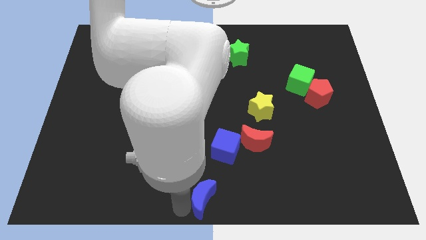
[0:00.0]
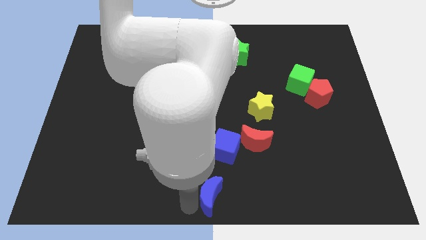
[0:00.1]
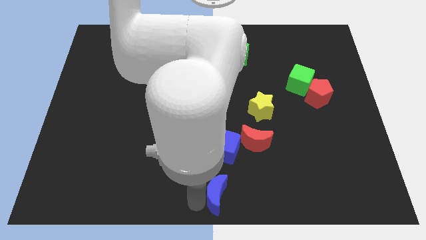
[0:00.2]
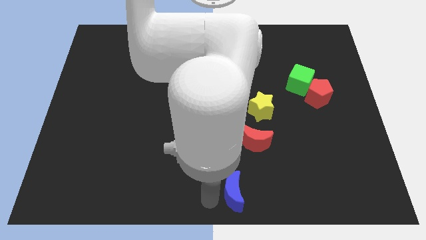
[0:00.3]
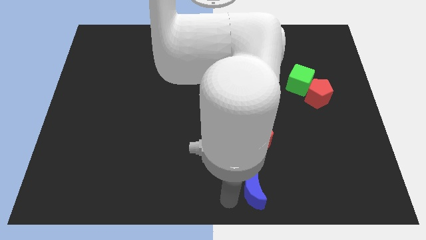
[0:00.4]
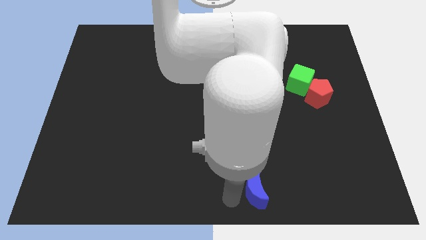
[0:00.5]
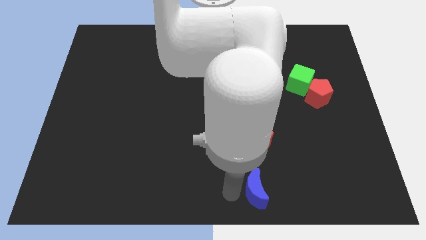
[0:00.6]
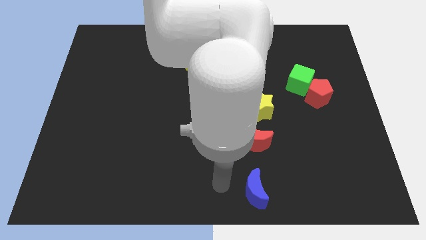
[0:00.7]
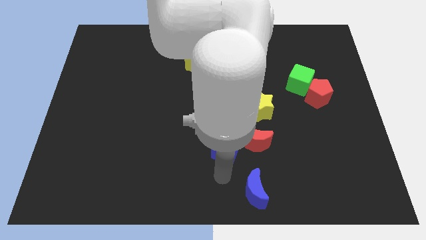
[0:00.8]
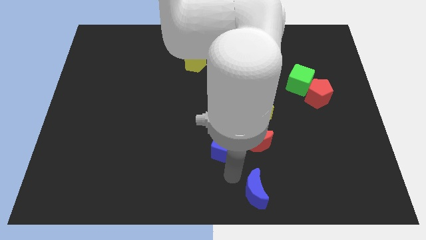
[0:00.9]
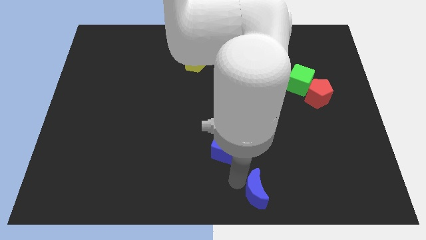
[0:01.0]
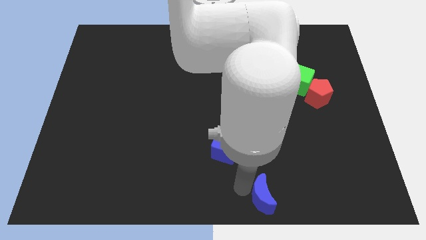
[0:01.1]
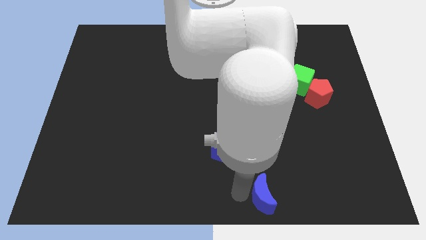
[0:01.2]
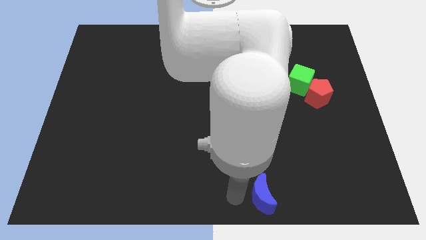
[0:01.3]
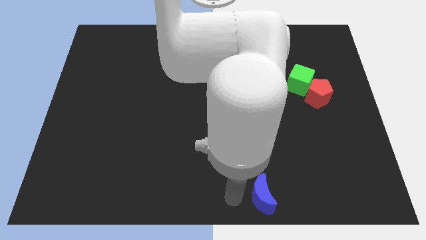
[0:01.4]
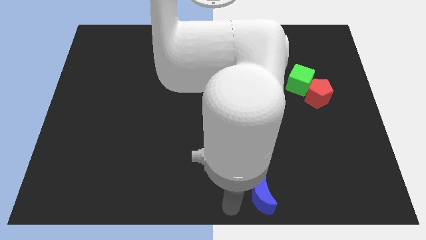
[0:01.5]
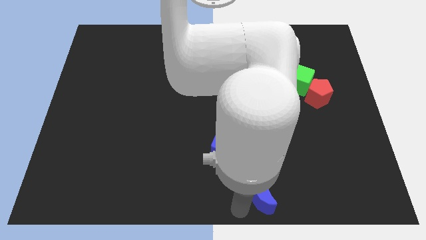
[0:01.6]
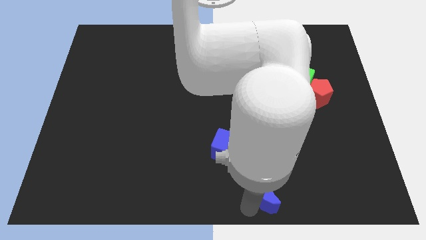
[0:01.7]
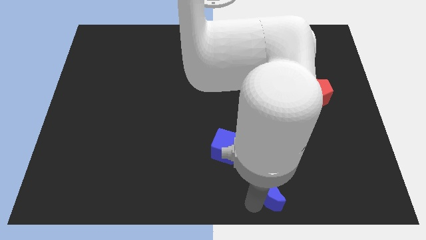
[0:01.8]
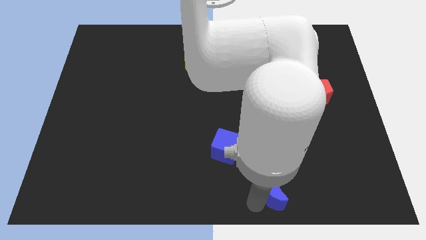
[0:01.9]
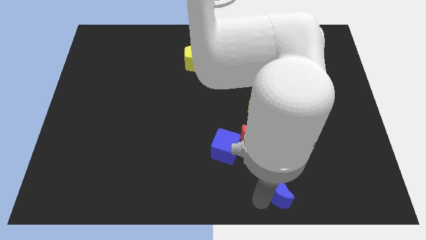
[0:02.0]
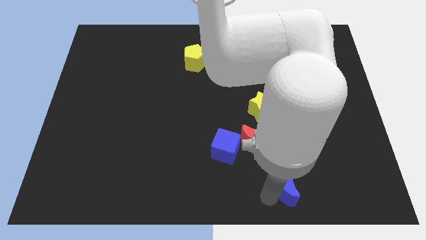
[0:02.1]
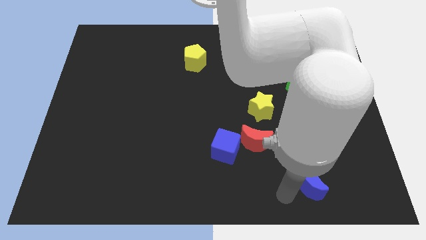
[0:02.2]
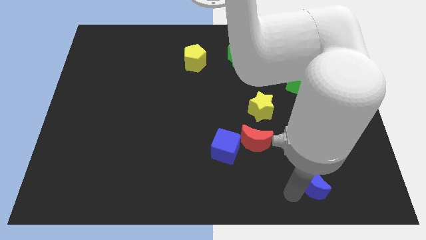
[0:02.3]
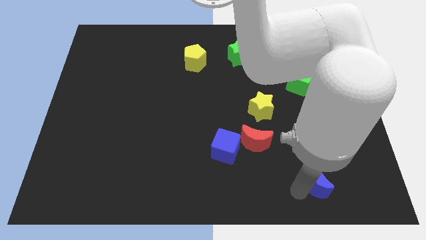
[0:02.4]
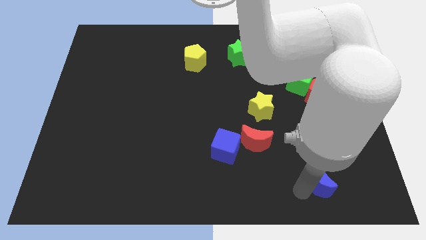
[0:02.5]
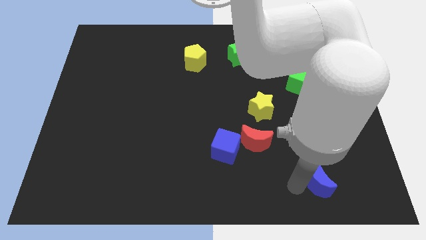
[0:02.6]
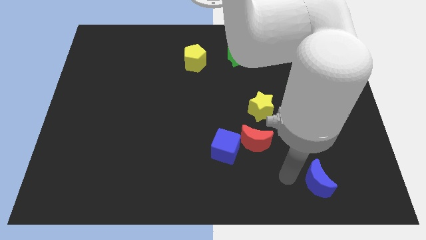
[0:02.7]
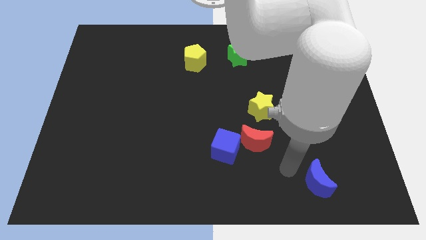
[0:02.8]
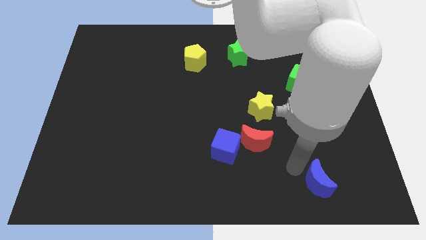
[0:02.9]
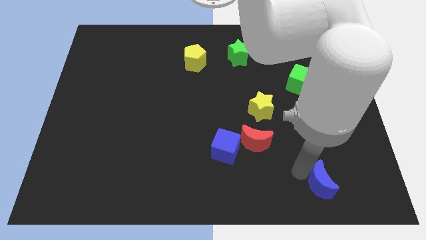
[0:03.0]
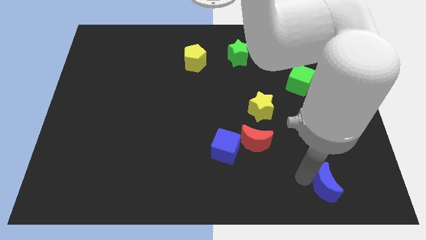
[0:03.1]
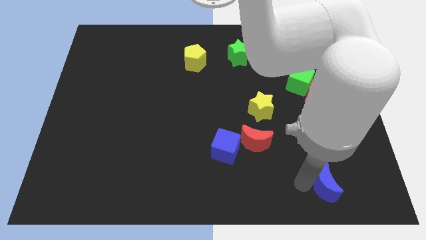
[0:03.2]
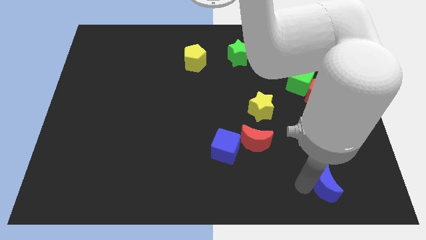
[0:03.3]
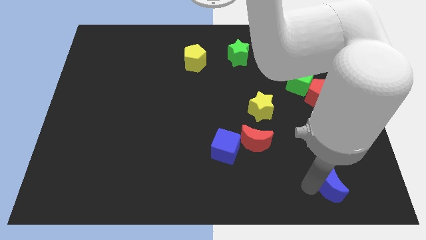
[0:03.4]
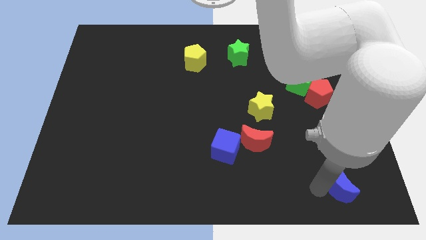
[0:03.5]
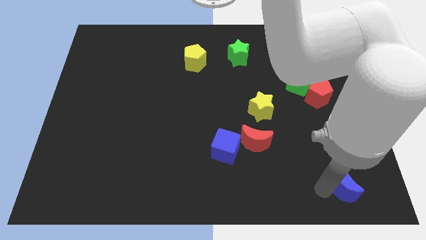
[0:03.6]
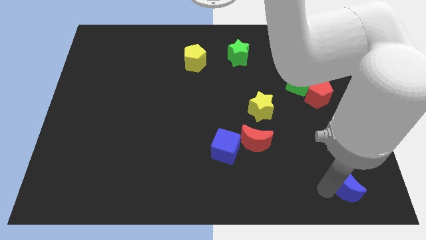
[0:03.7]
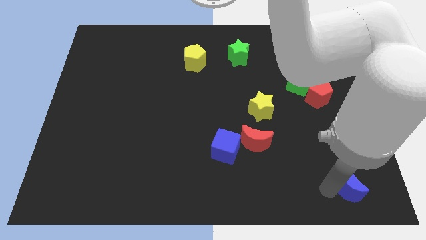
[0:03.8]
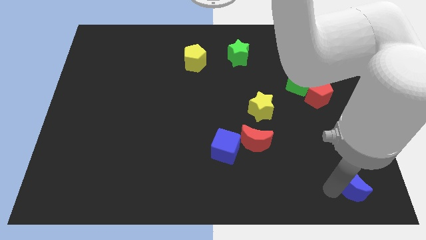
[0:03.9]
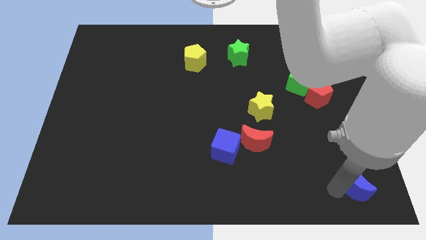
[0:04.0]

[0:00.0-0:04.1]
push blue moon towards bottom right

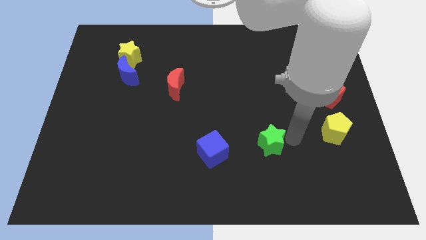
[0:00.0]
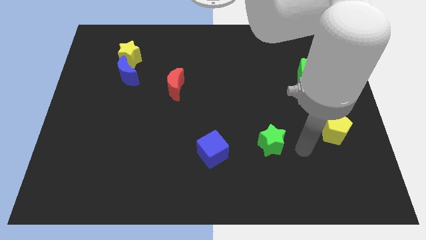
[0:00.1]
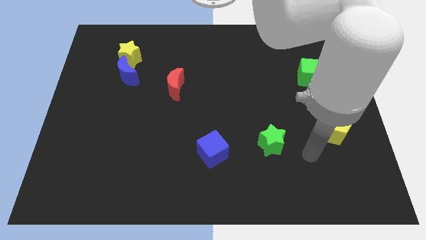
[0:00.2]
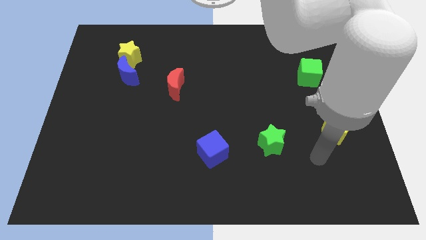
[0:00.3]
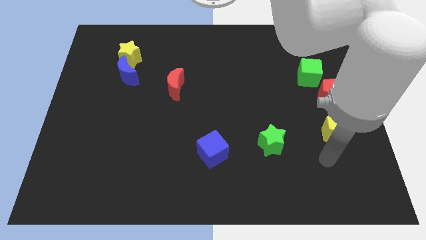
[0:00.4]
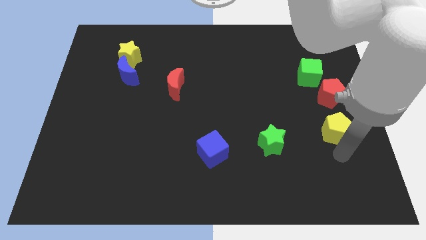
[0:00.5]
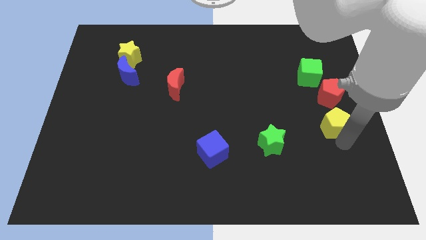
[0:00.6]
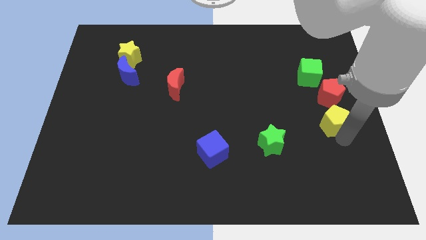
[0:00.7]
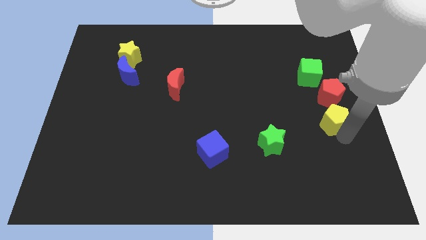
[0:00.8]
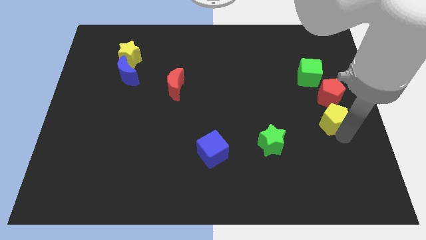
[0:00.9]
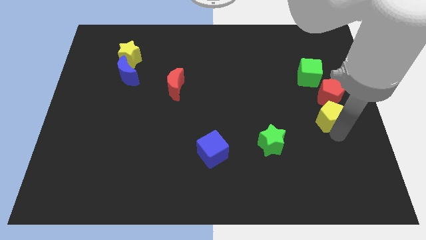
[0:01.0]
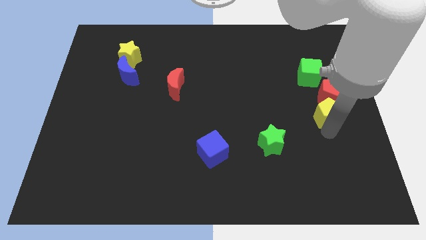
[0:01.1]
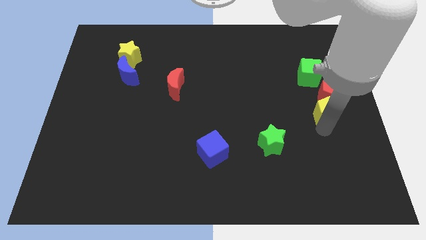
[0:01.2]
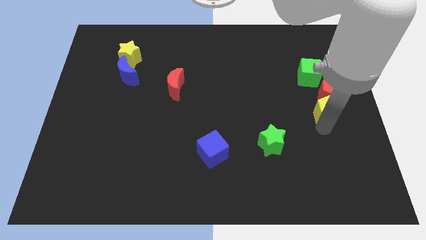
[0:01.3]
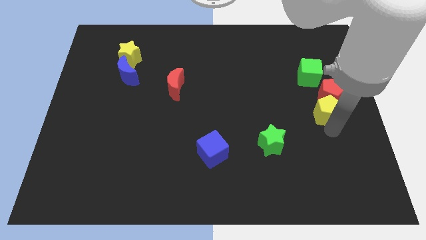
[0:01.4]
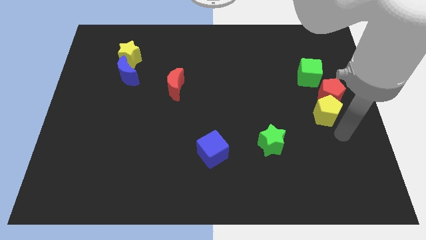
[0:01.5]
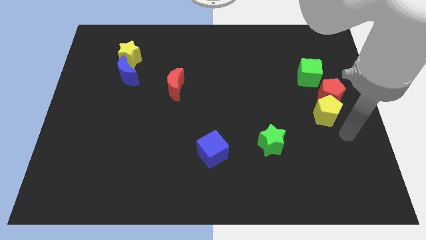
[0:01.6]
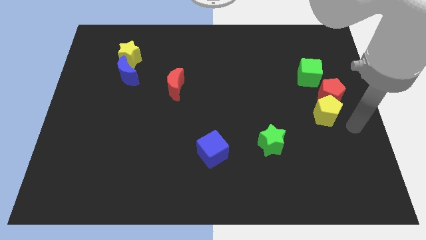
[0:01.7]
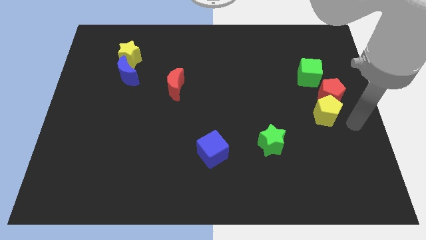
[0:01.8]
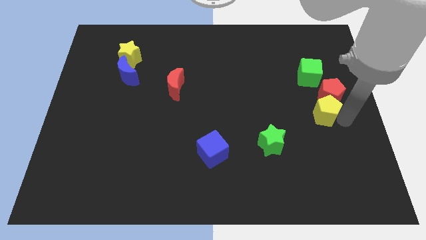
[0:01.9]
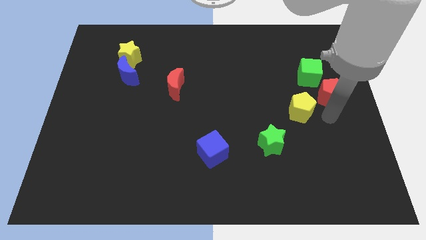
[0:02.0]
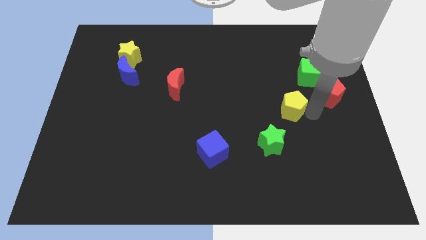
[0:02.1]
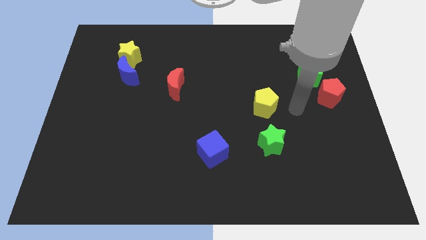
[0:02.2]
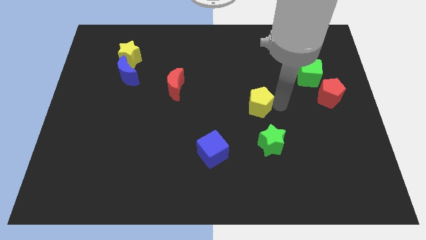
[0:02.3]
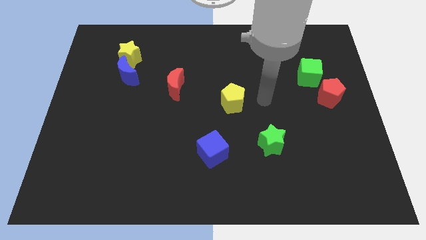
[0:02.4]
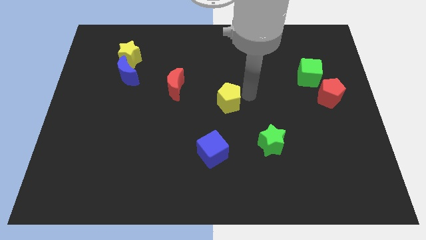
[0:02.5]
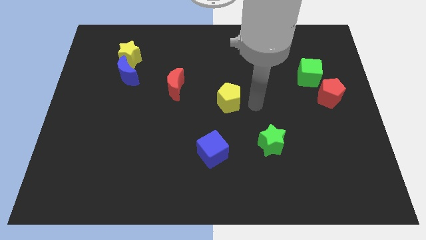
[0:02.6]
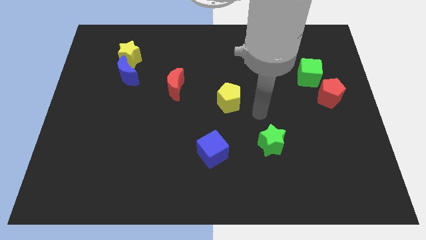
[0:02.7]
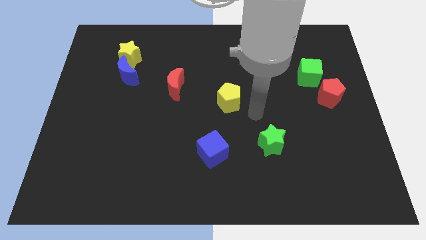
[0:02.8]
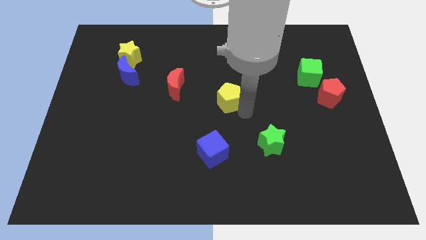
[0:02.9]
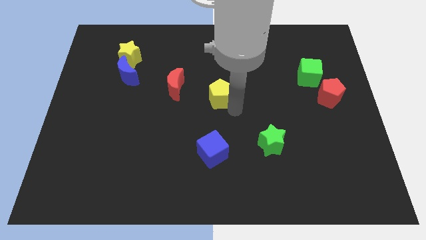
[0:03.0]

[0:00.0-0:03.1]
move the yellow pentagon to the center of the board

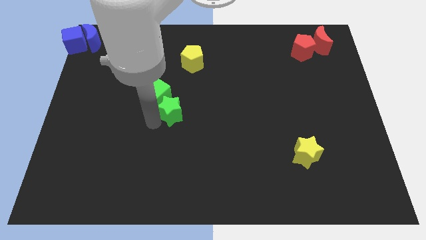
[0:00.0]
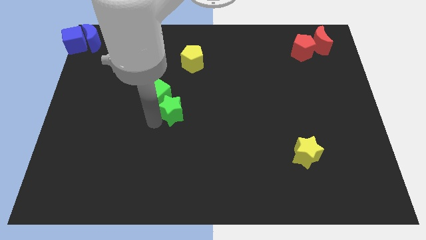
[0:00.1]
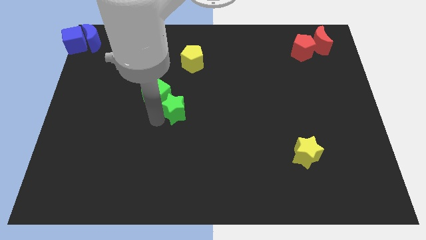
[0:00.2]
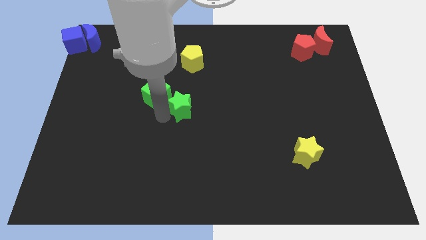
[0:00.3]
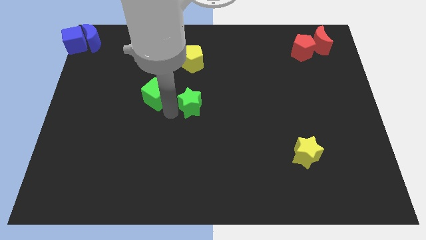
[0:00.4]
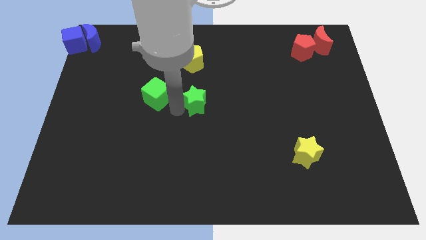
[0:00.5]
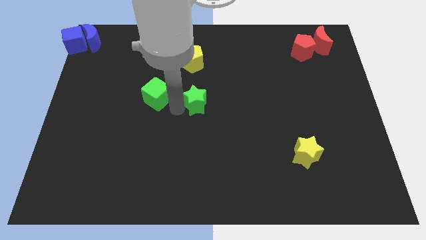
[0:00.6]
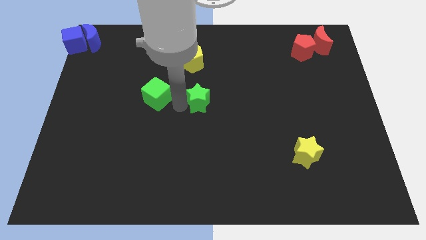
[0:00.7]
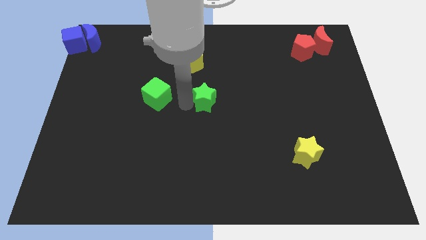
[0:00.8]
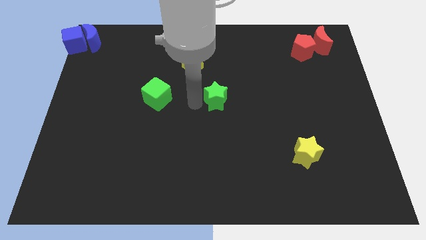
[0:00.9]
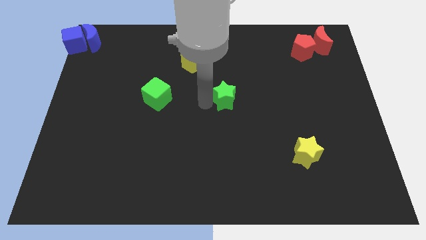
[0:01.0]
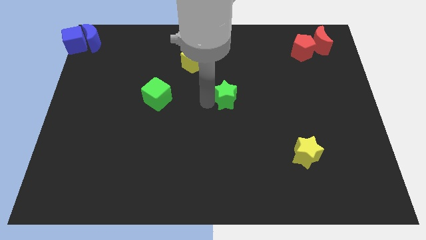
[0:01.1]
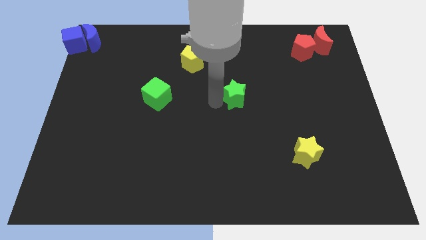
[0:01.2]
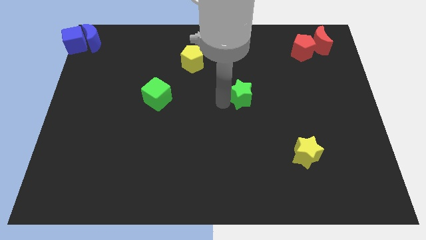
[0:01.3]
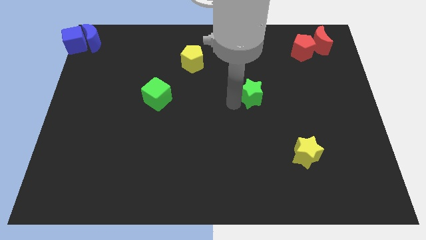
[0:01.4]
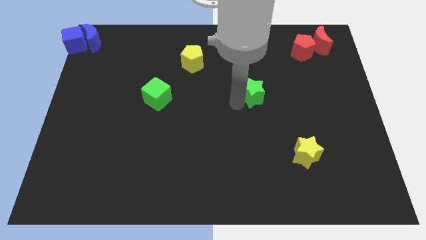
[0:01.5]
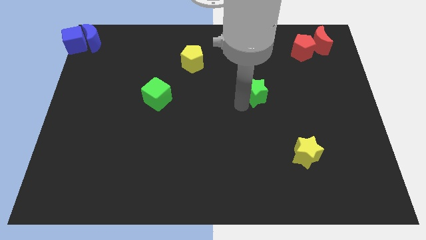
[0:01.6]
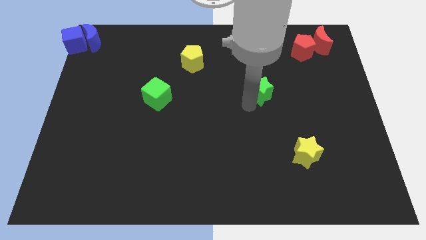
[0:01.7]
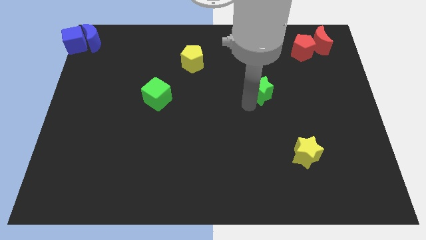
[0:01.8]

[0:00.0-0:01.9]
move the green star away from the green cube
